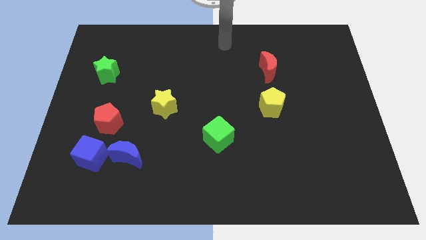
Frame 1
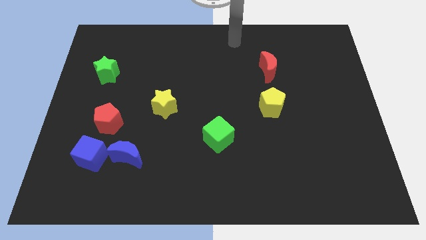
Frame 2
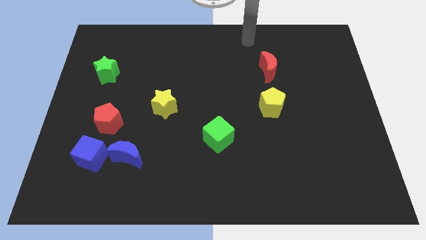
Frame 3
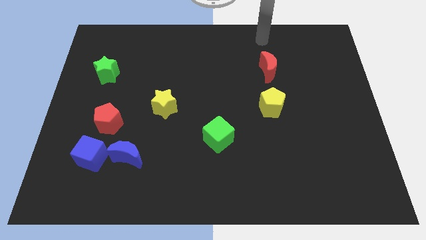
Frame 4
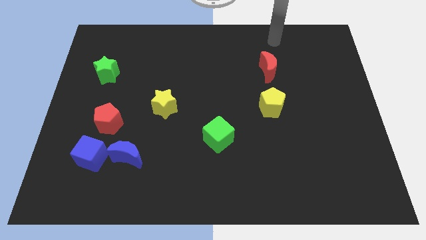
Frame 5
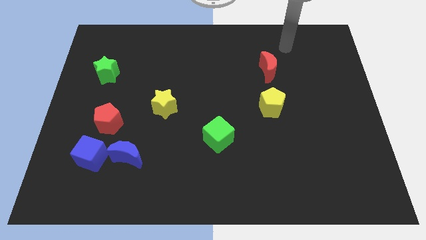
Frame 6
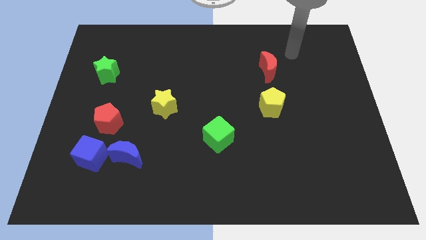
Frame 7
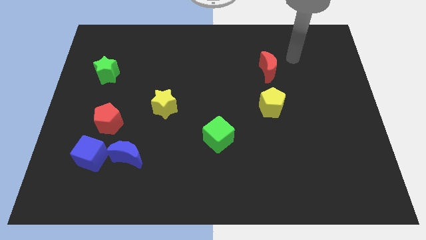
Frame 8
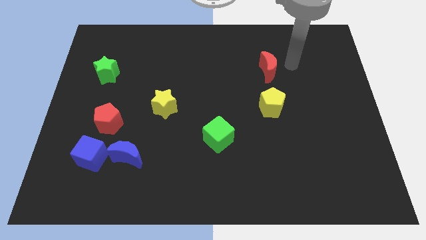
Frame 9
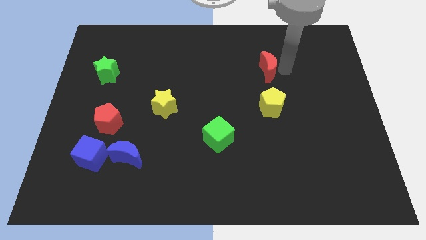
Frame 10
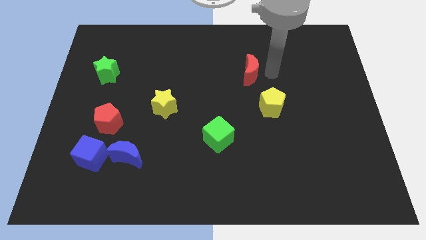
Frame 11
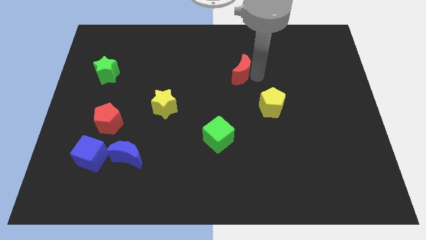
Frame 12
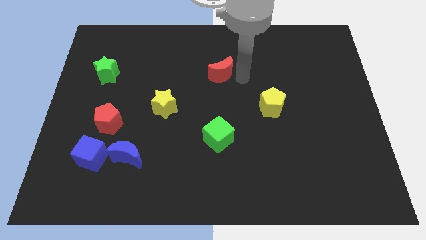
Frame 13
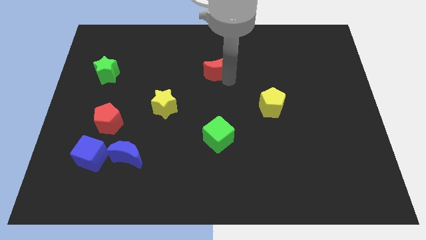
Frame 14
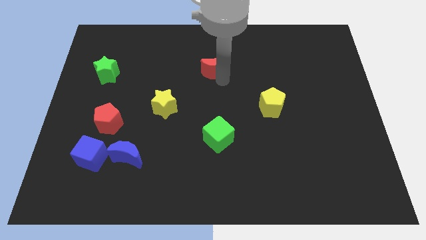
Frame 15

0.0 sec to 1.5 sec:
push the red moon at the center top of the yellow star and yellow pentagon

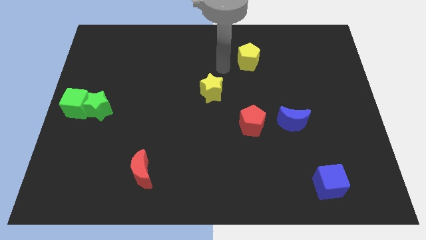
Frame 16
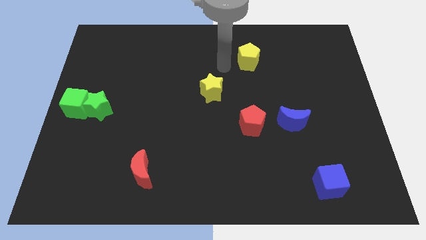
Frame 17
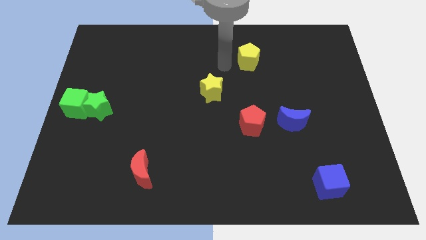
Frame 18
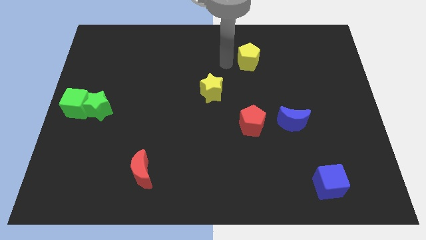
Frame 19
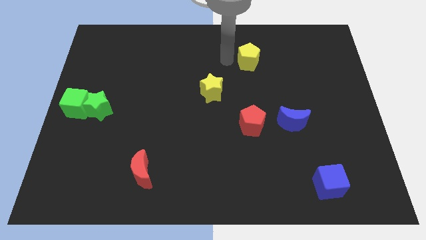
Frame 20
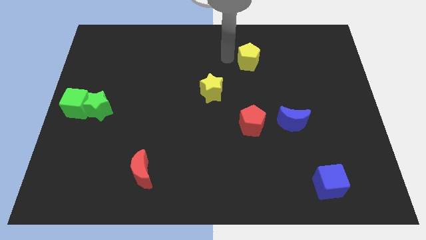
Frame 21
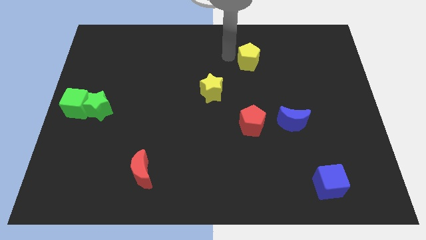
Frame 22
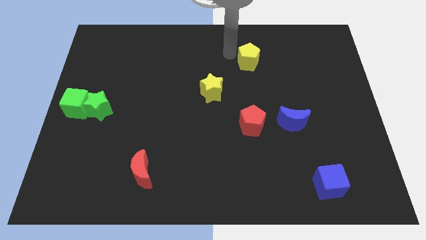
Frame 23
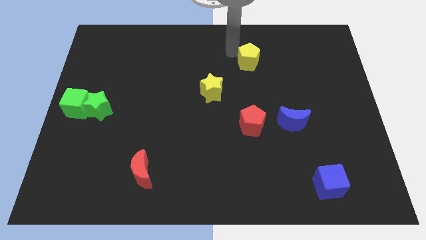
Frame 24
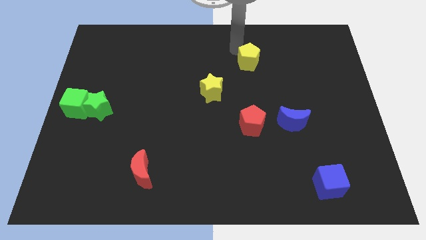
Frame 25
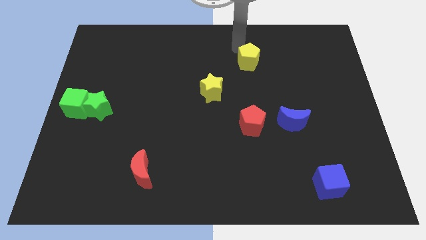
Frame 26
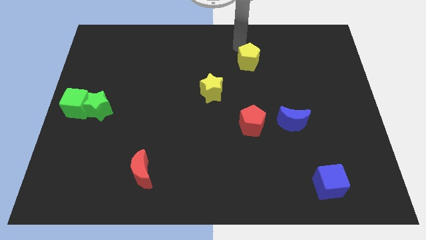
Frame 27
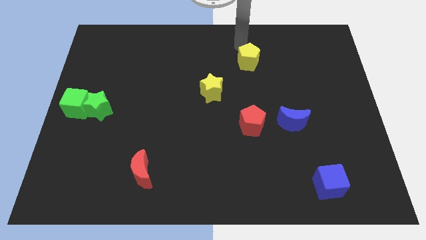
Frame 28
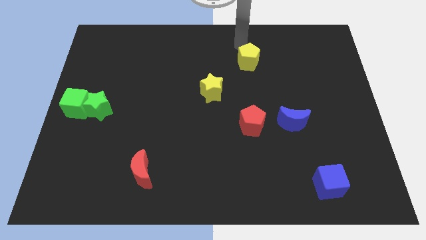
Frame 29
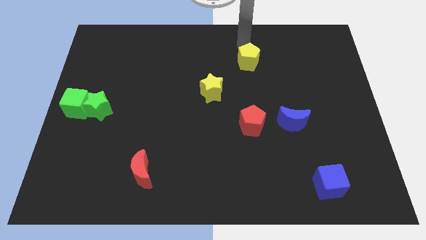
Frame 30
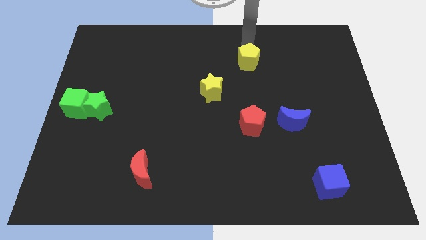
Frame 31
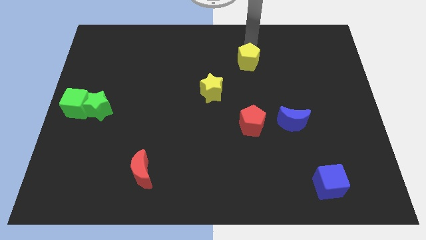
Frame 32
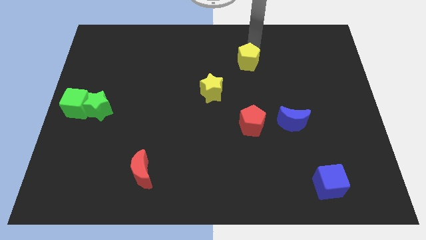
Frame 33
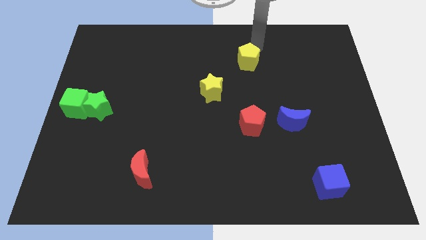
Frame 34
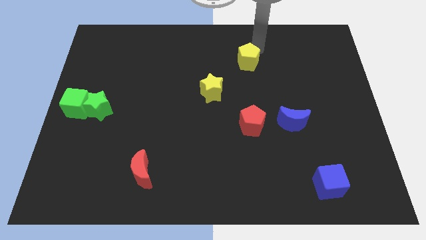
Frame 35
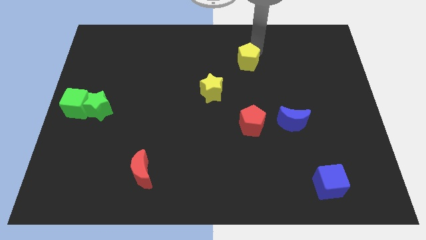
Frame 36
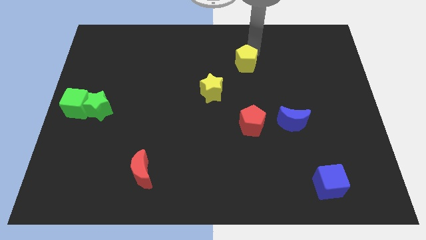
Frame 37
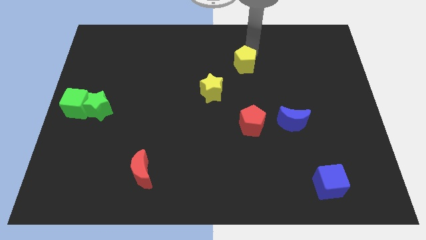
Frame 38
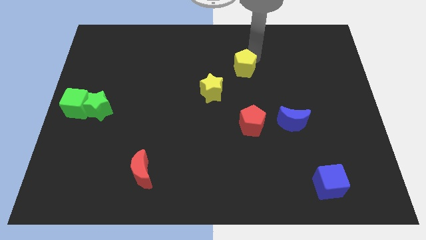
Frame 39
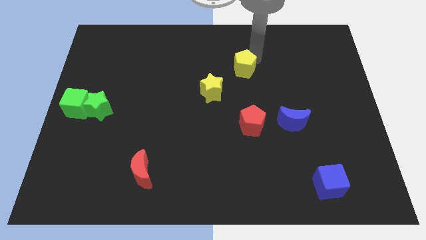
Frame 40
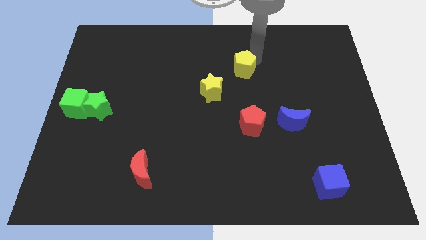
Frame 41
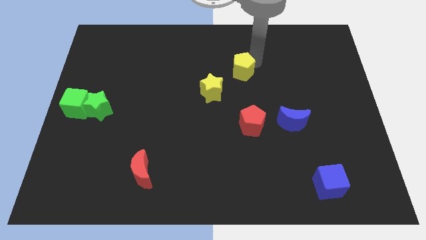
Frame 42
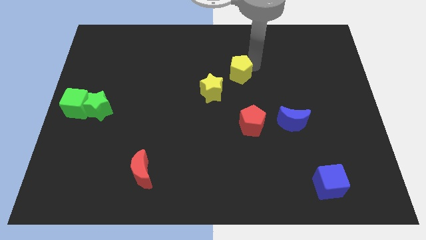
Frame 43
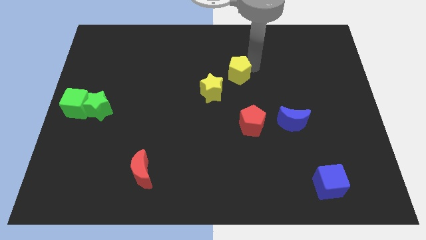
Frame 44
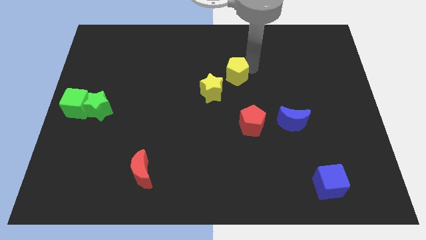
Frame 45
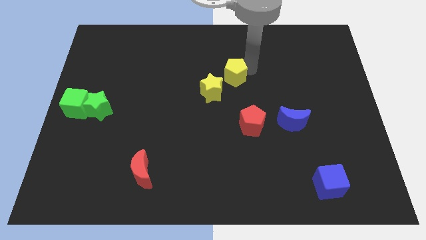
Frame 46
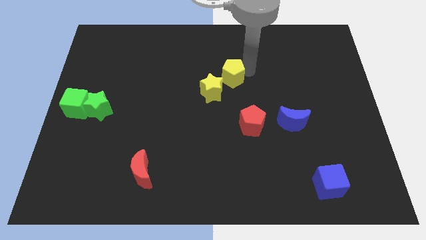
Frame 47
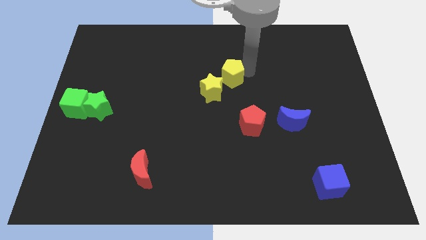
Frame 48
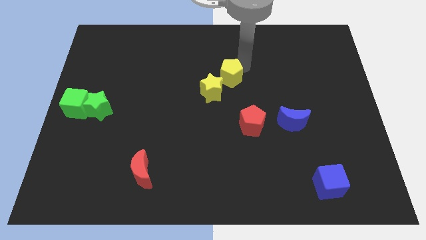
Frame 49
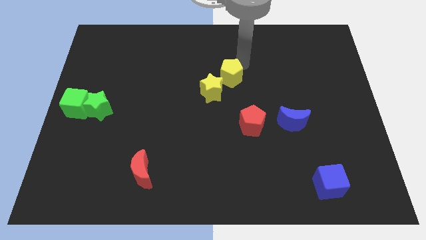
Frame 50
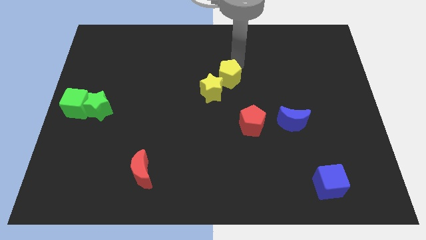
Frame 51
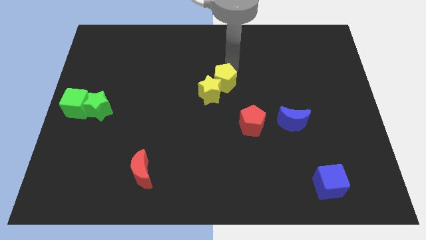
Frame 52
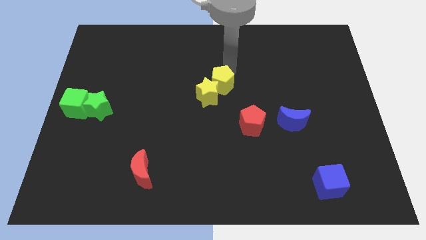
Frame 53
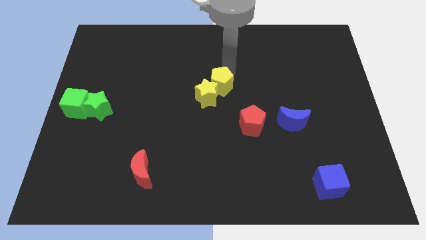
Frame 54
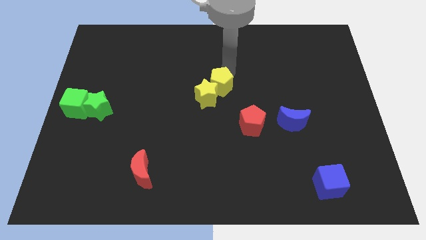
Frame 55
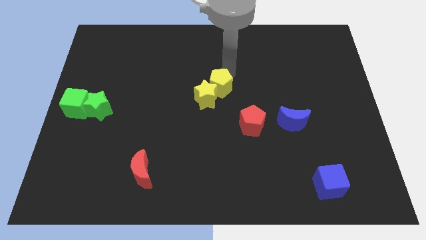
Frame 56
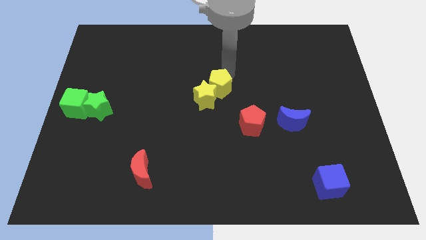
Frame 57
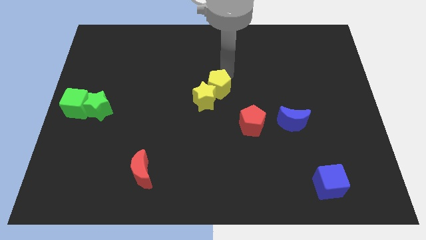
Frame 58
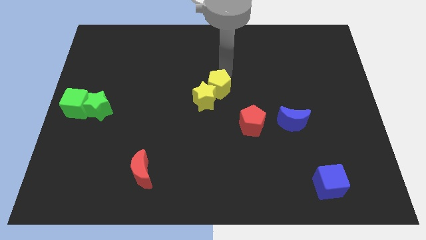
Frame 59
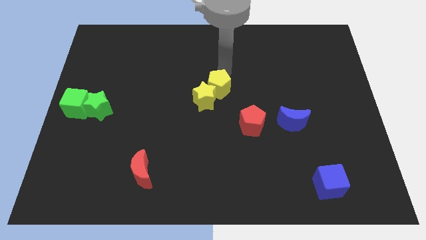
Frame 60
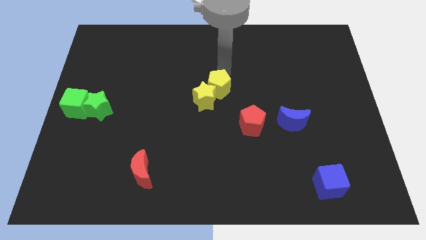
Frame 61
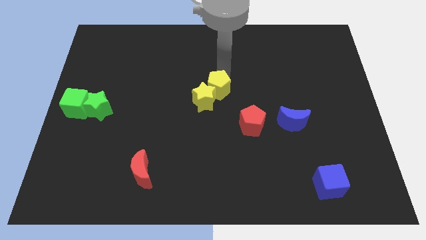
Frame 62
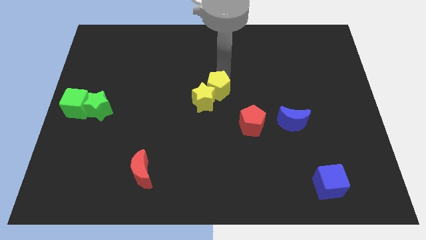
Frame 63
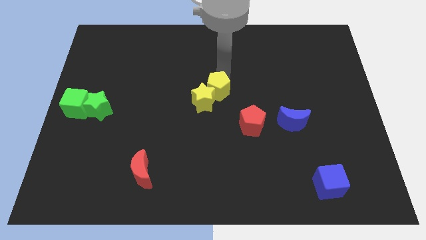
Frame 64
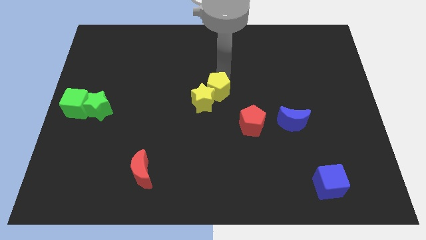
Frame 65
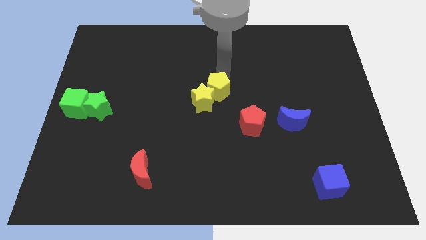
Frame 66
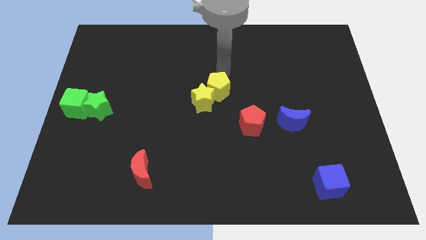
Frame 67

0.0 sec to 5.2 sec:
group up the yellow blocks at the center of the board

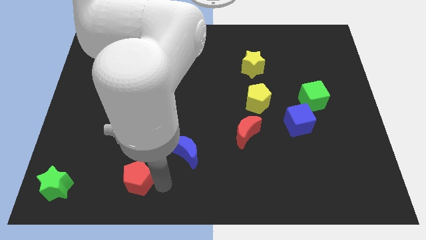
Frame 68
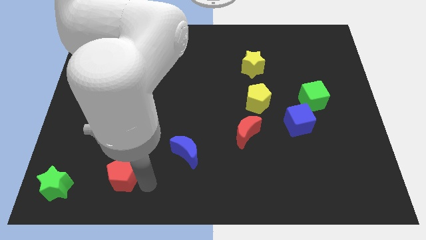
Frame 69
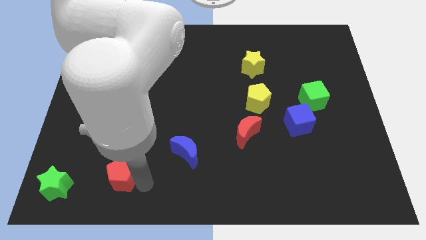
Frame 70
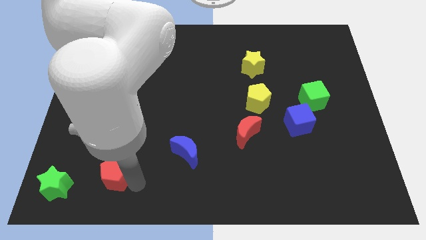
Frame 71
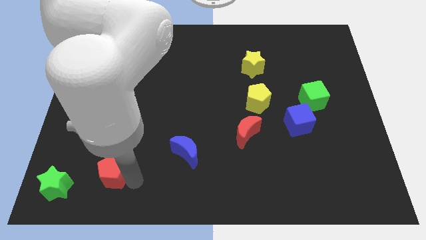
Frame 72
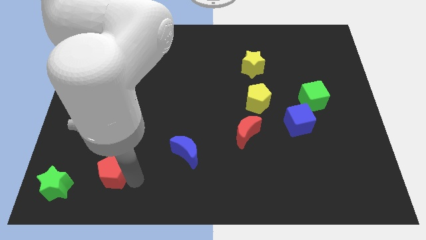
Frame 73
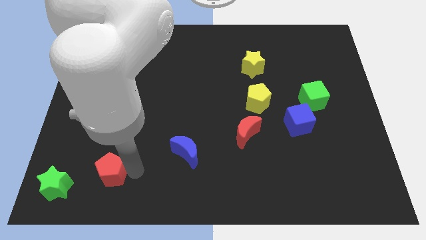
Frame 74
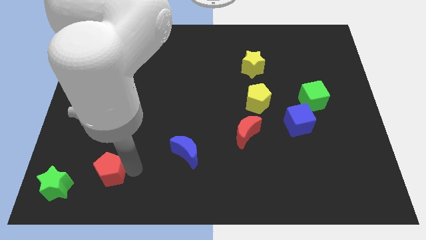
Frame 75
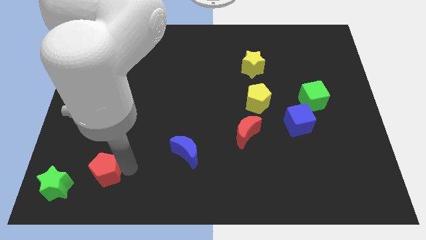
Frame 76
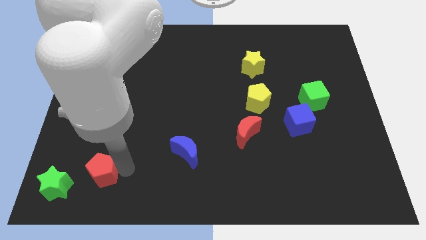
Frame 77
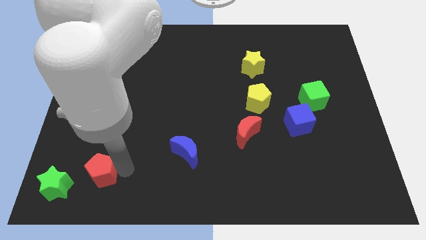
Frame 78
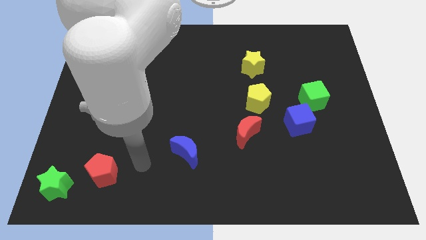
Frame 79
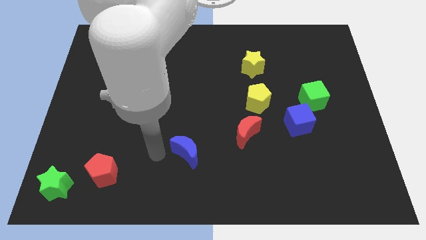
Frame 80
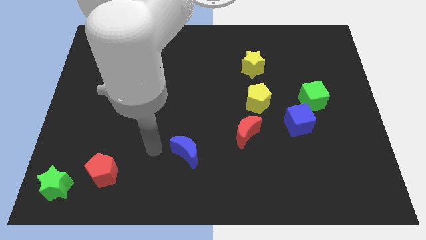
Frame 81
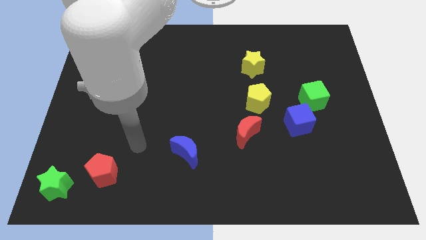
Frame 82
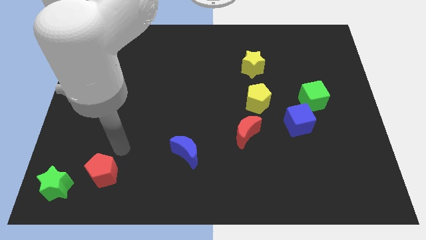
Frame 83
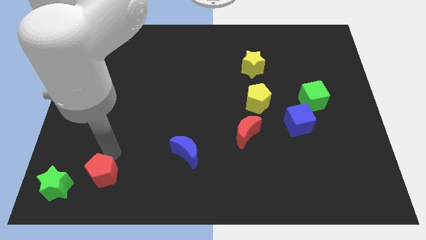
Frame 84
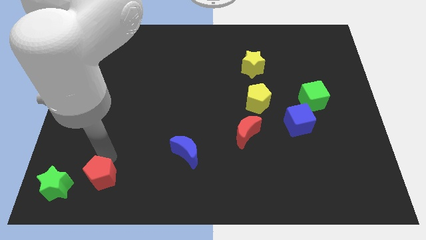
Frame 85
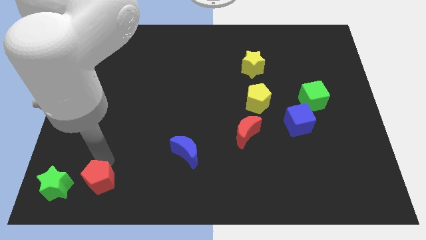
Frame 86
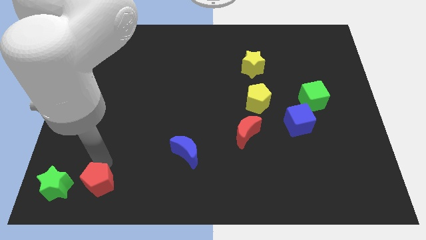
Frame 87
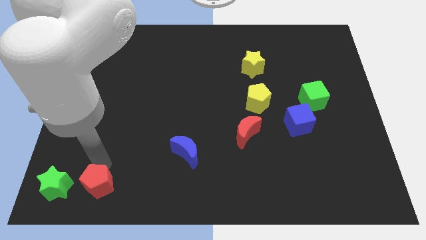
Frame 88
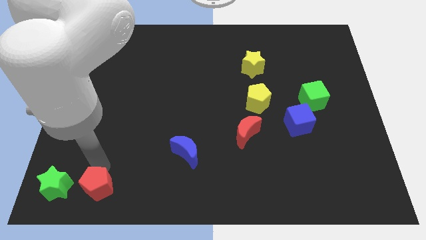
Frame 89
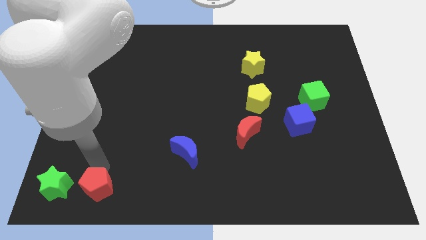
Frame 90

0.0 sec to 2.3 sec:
move the red pentagon right to the green star
